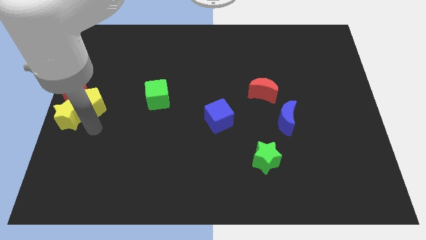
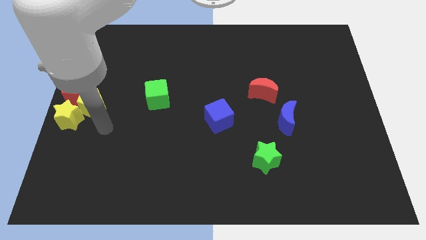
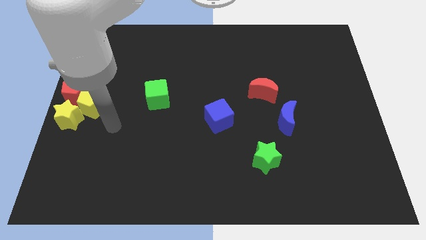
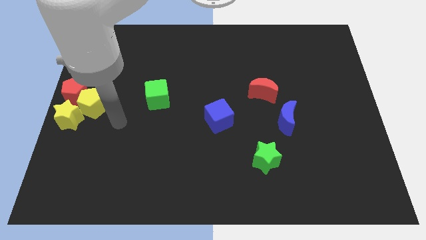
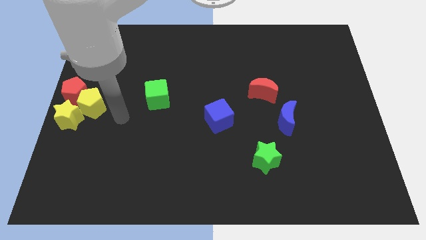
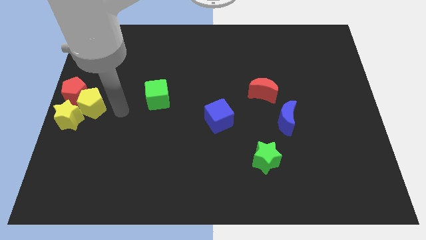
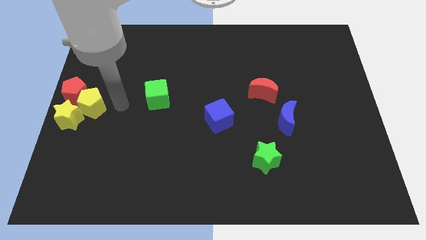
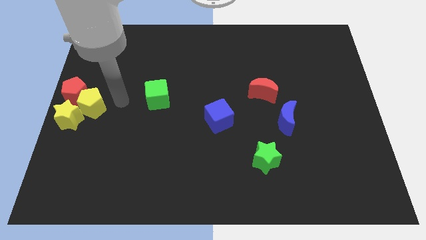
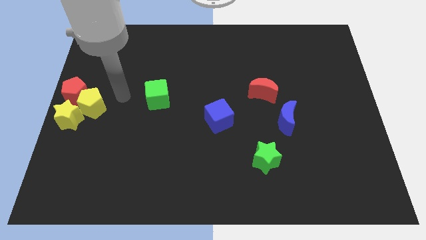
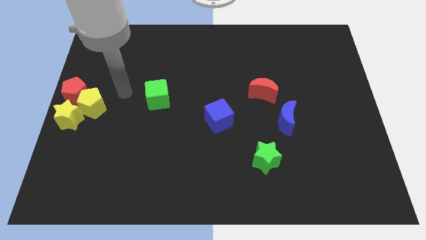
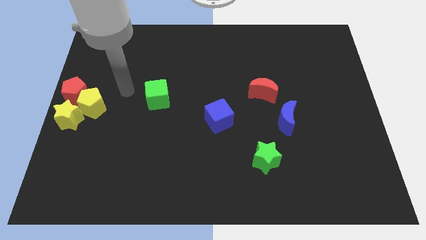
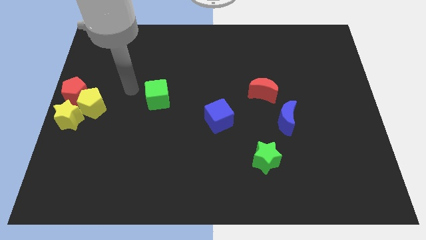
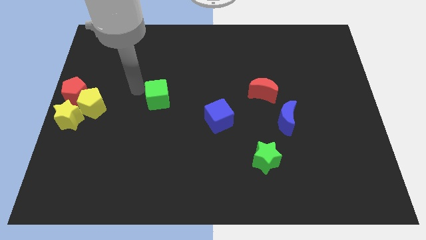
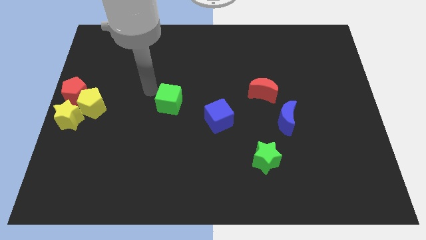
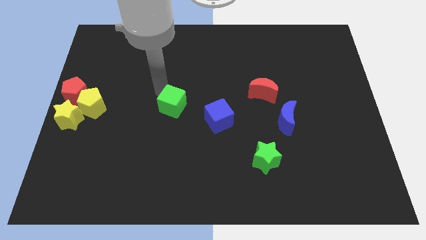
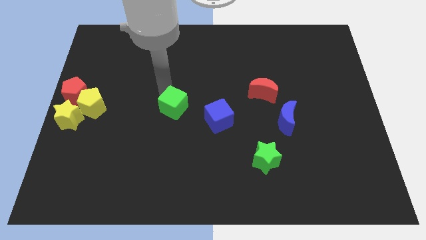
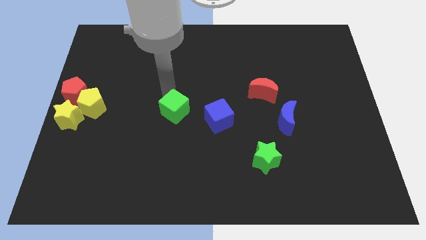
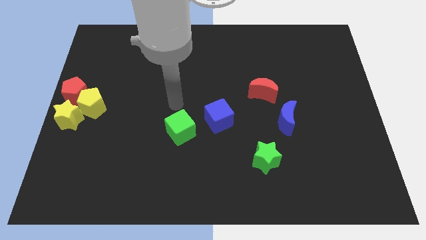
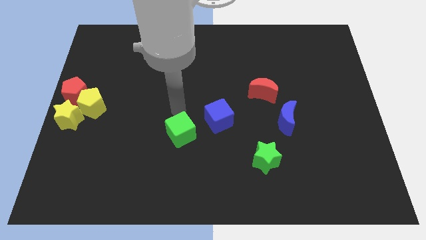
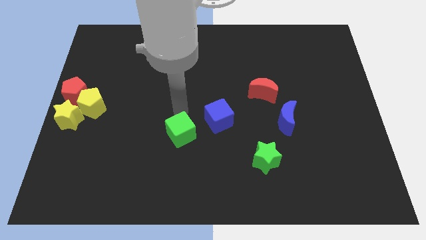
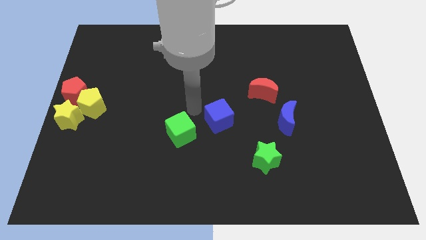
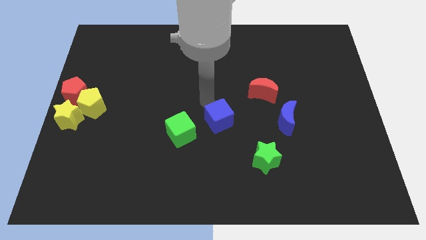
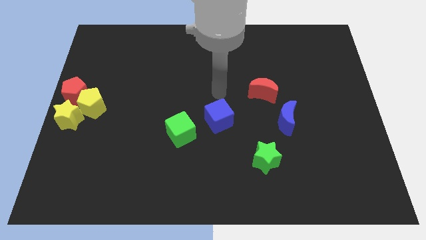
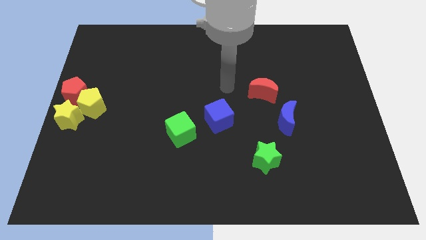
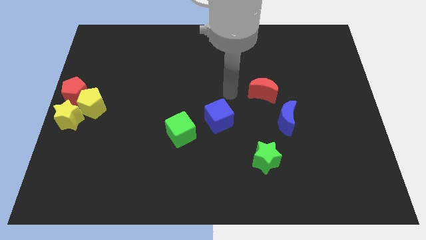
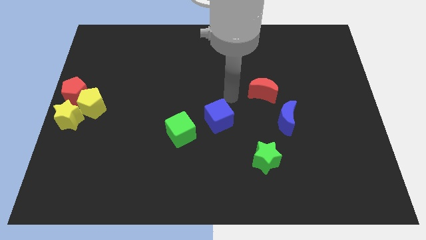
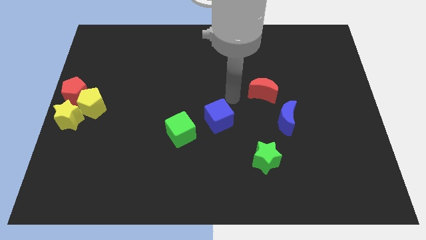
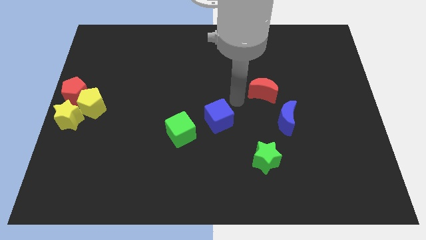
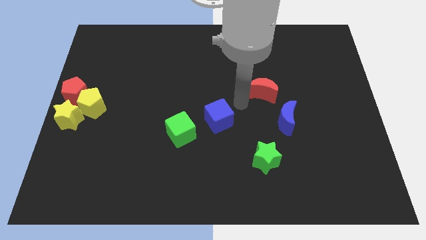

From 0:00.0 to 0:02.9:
move the green cube left to the blue cube

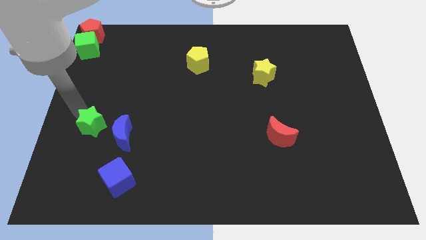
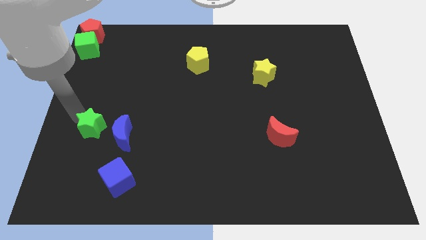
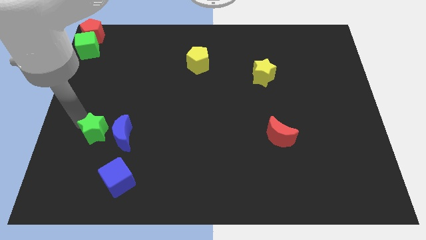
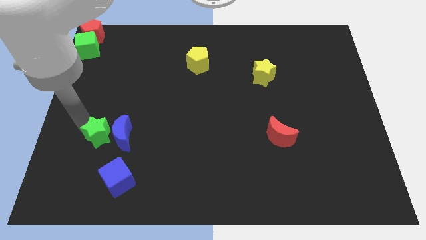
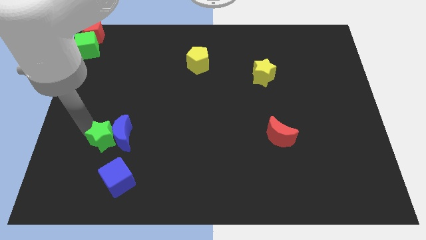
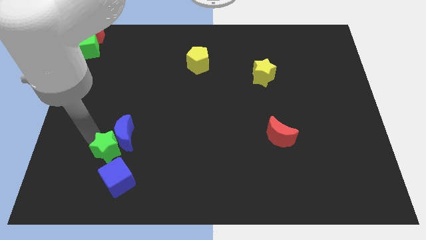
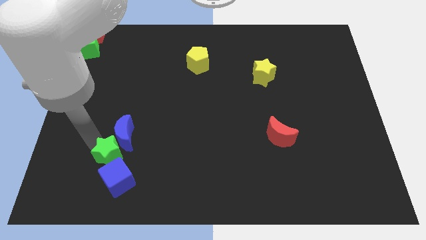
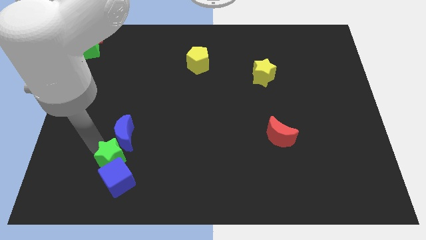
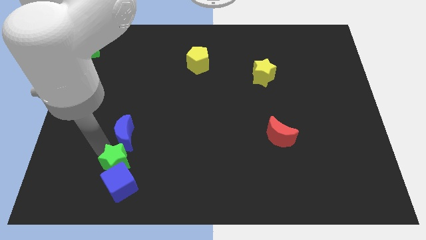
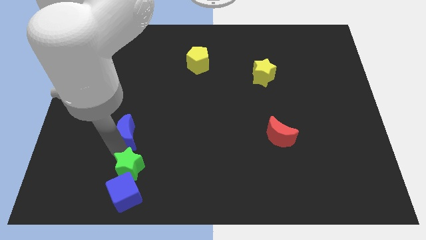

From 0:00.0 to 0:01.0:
place the green star in between the blue blocks

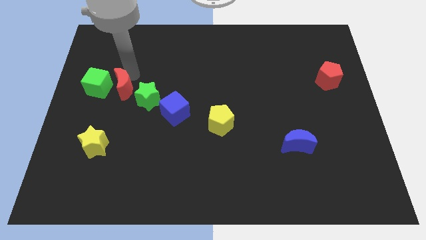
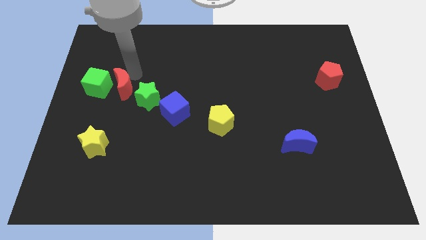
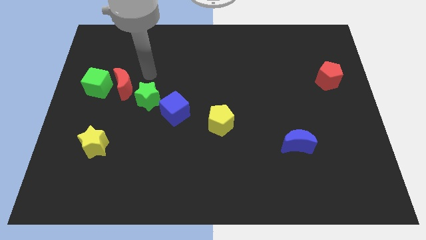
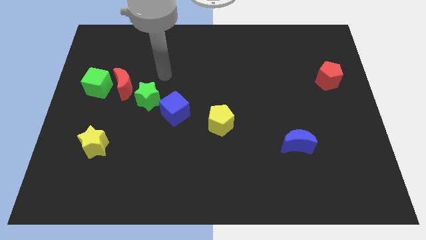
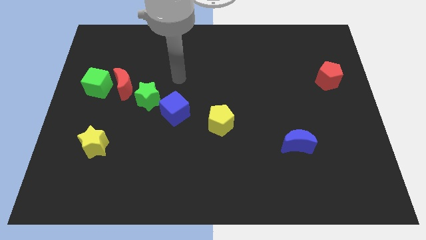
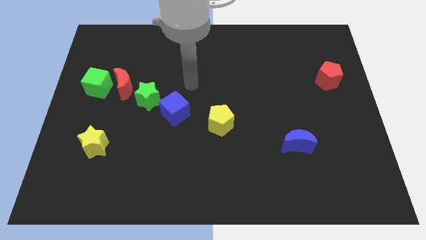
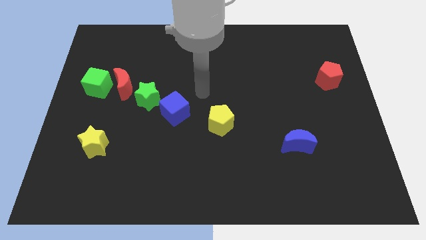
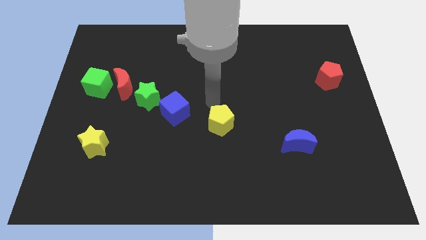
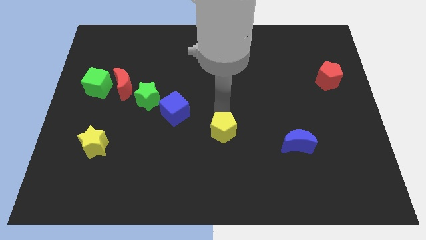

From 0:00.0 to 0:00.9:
move the arm away from the red moon

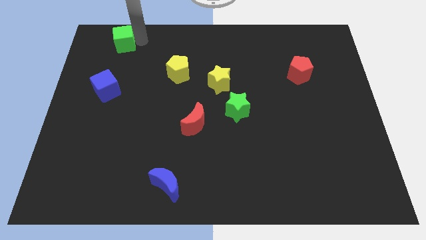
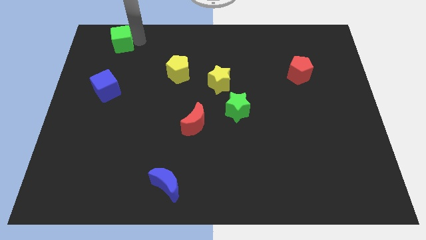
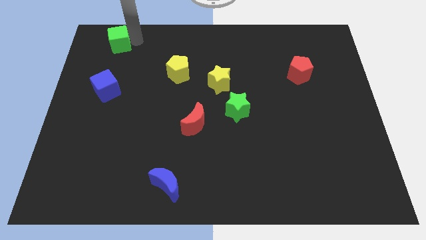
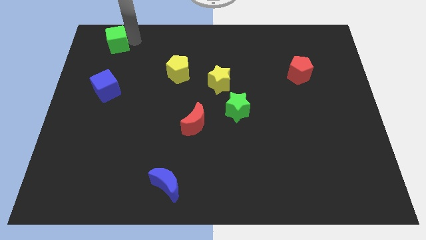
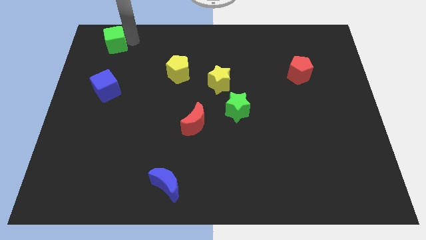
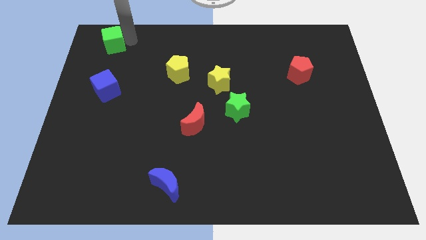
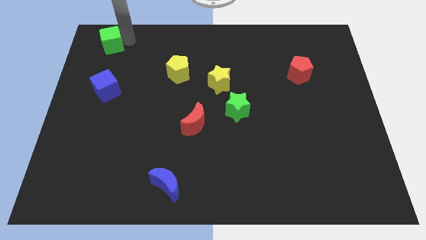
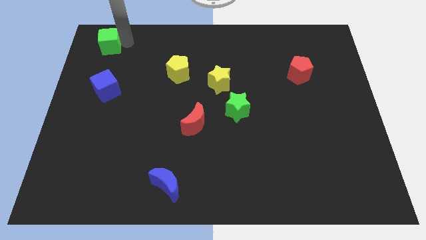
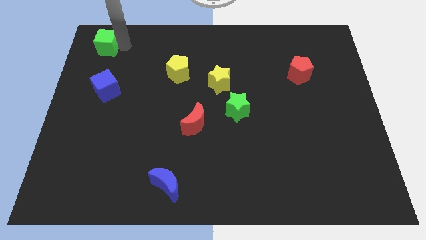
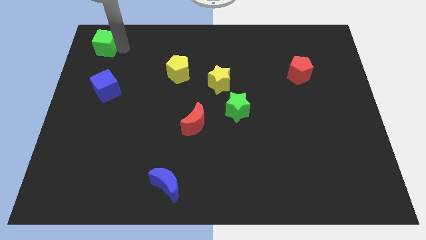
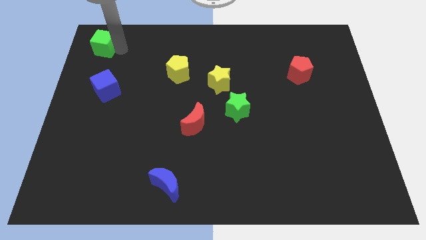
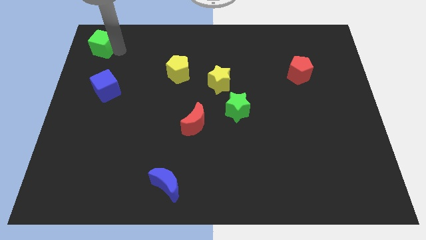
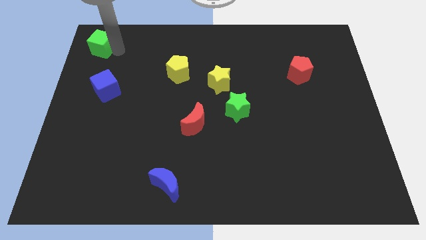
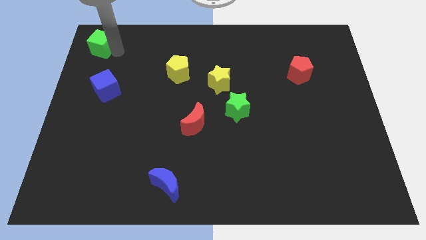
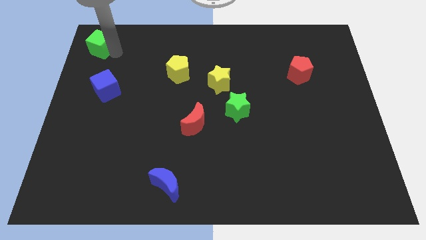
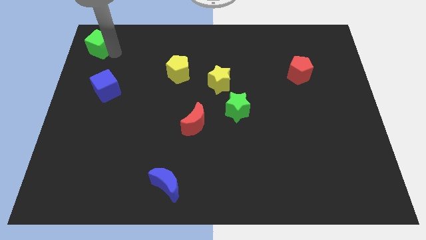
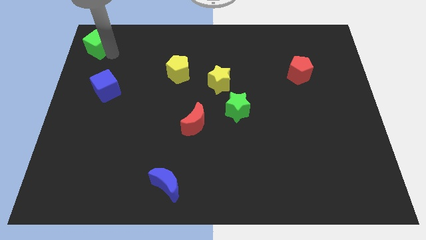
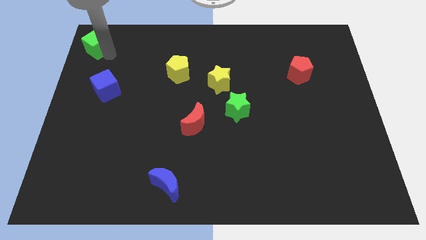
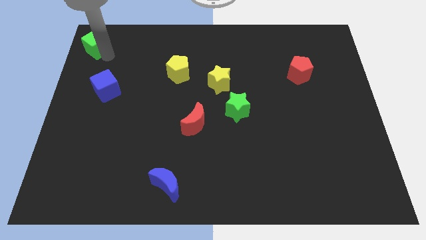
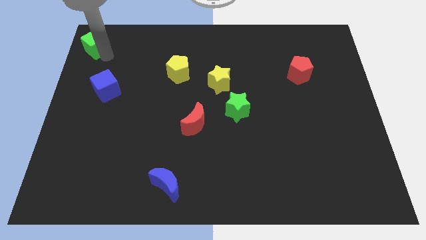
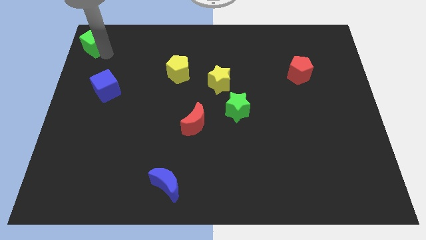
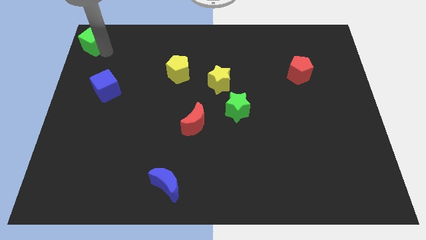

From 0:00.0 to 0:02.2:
push the green cube towards the top left side of the board

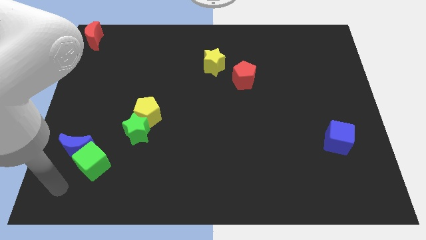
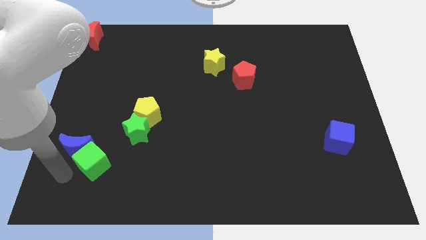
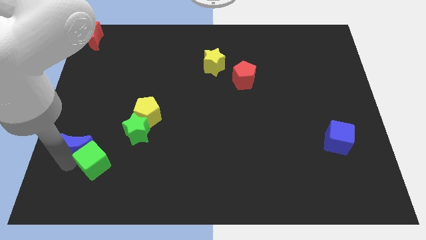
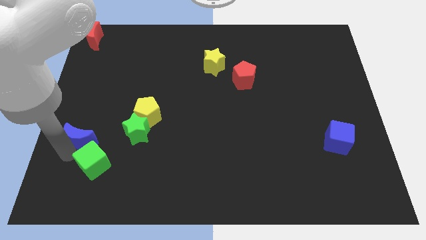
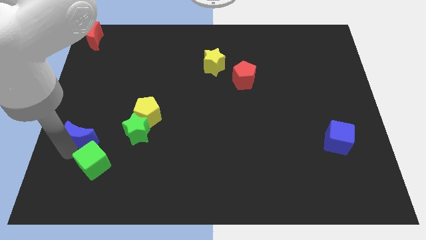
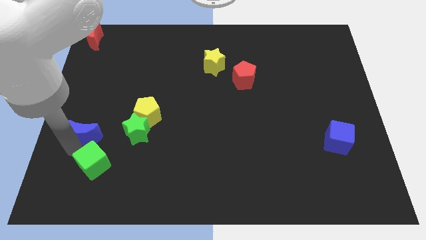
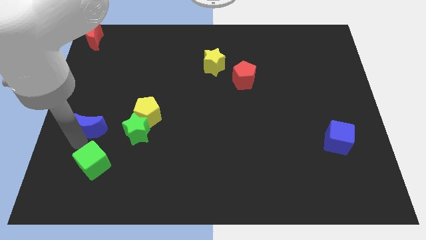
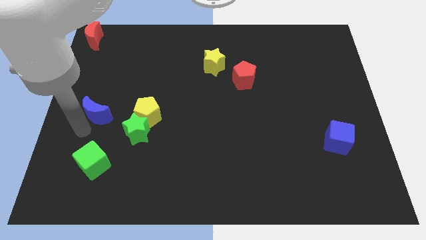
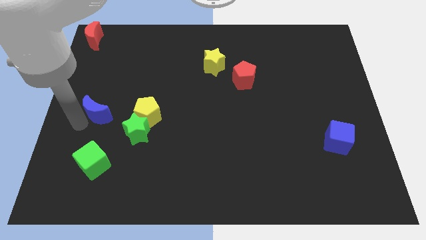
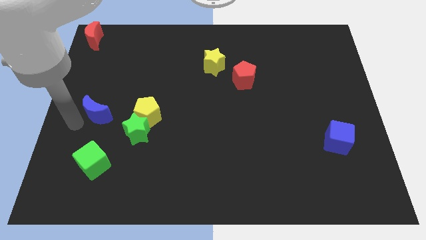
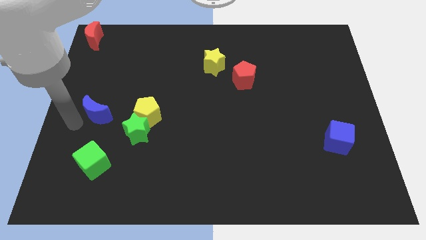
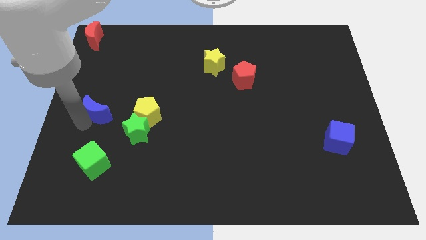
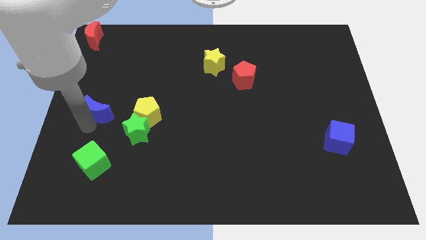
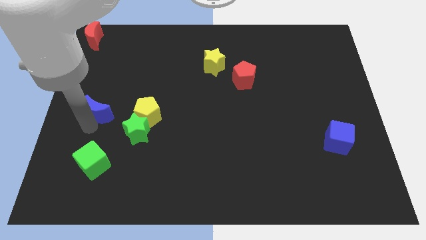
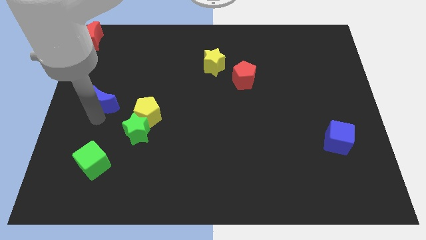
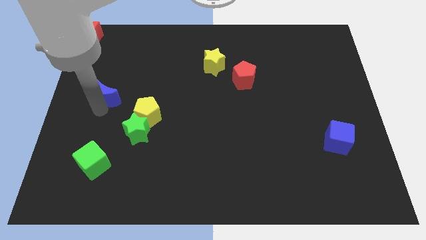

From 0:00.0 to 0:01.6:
separate the blue moon and green cube

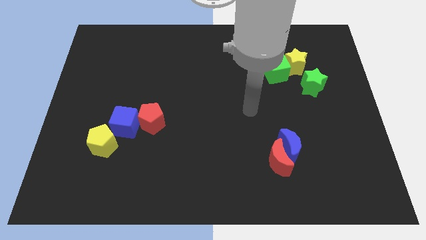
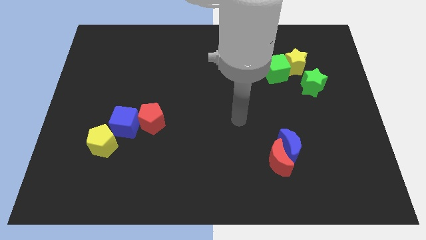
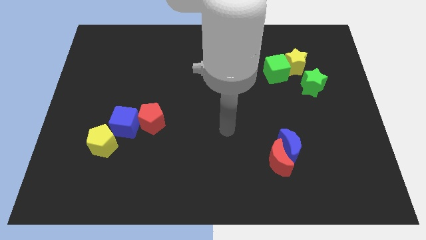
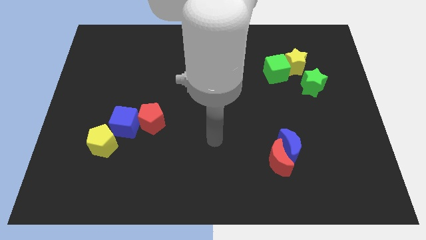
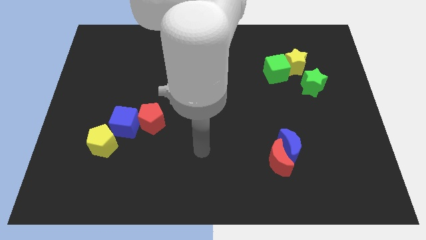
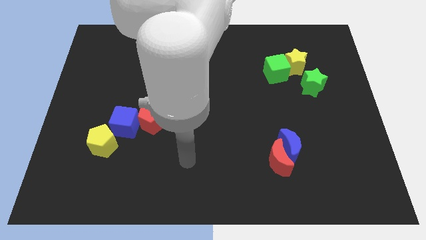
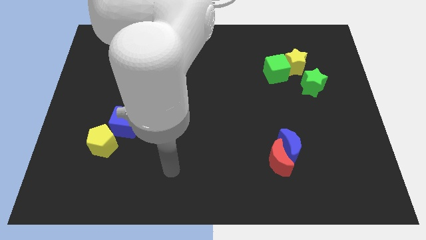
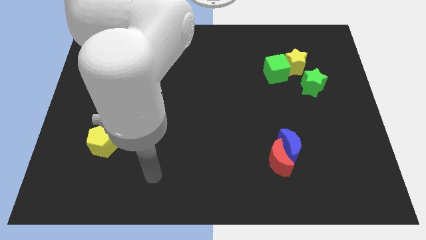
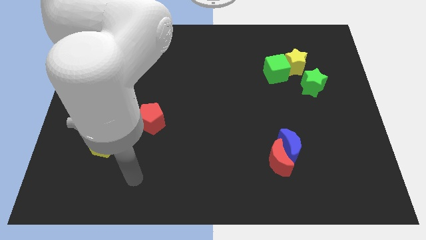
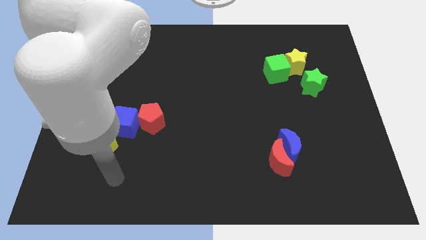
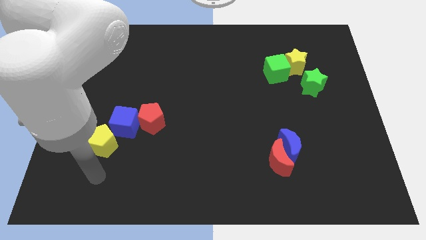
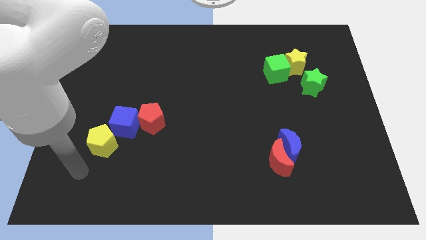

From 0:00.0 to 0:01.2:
point yourself at the bottom side of the yellow pentagon
